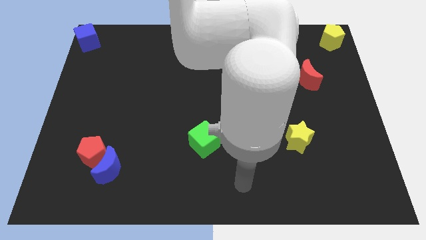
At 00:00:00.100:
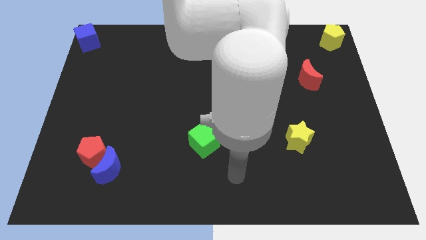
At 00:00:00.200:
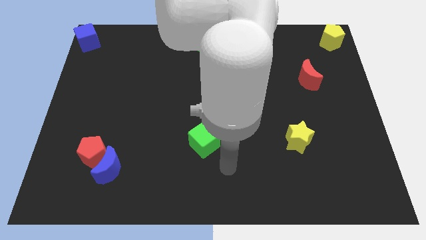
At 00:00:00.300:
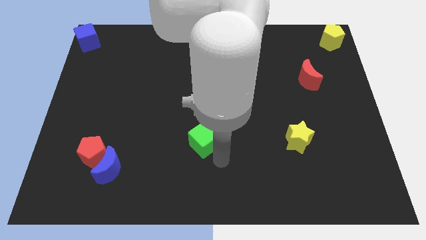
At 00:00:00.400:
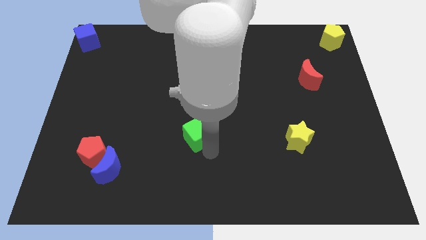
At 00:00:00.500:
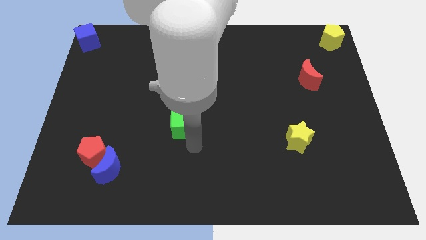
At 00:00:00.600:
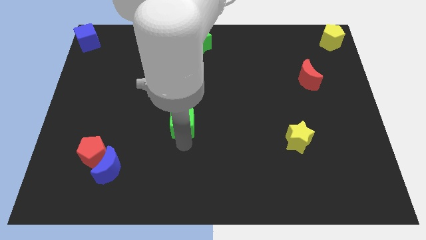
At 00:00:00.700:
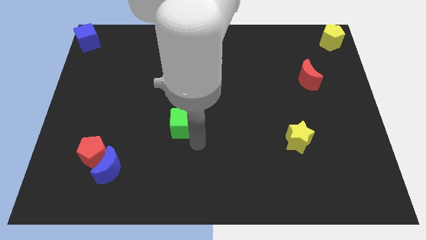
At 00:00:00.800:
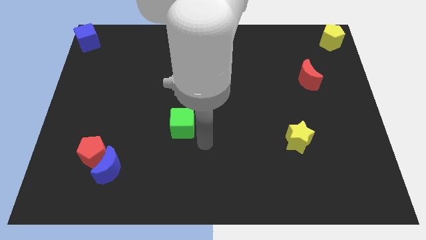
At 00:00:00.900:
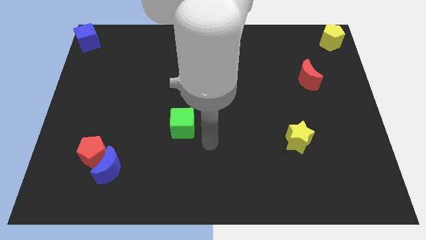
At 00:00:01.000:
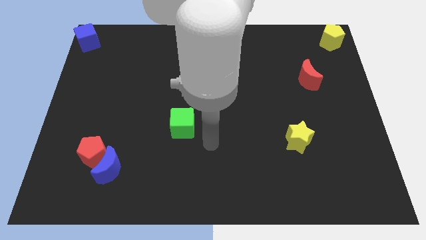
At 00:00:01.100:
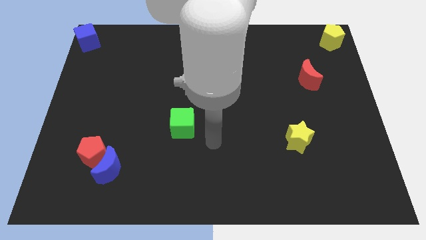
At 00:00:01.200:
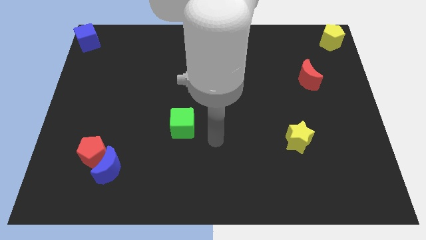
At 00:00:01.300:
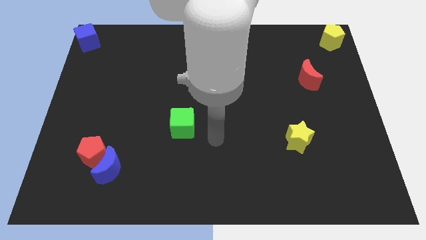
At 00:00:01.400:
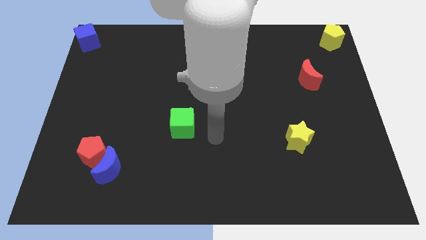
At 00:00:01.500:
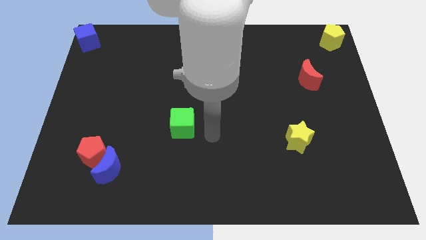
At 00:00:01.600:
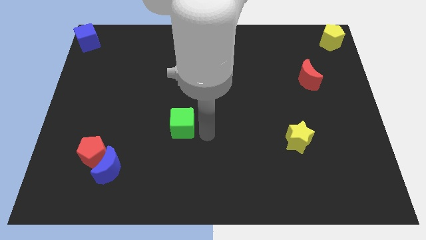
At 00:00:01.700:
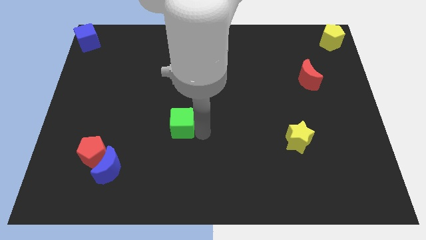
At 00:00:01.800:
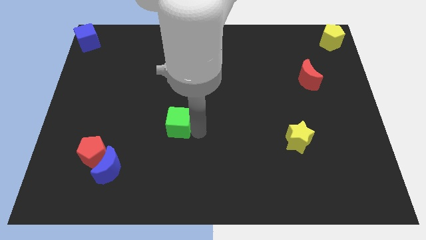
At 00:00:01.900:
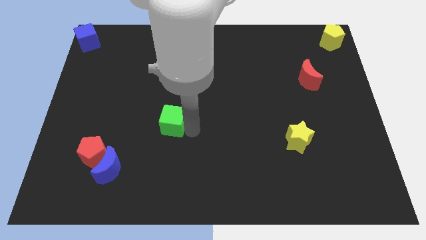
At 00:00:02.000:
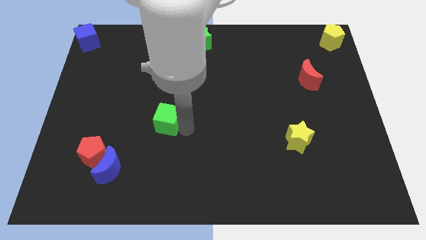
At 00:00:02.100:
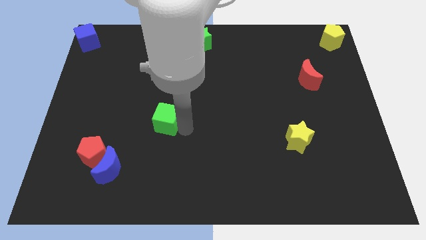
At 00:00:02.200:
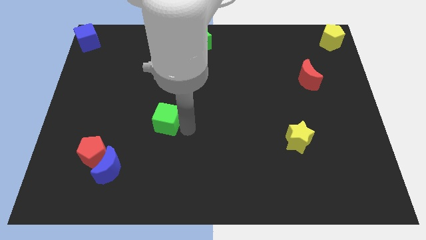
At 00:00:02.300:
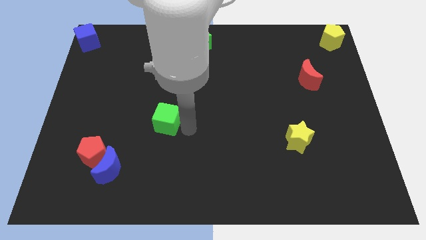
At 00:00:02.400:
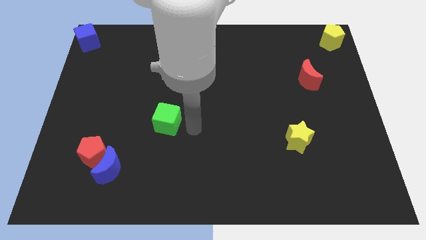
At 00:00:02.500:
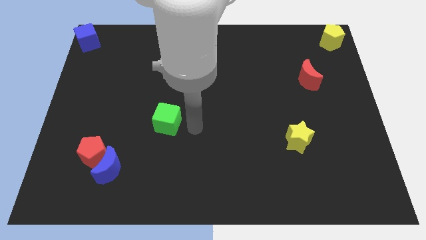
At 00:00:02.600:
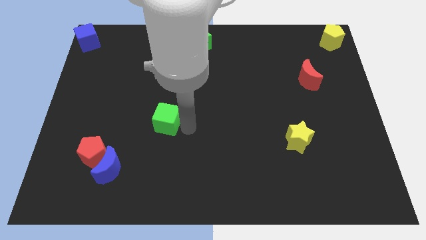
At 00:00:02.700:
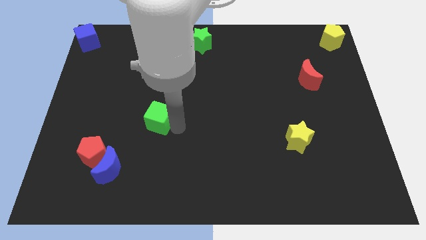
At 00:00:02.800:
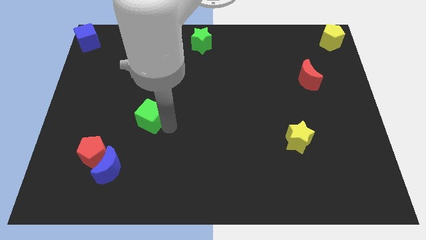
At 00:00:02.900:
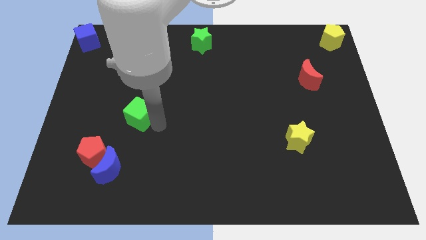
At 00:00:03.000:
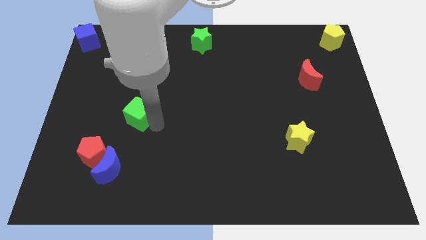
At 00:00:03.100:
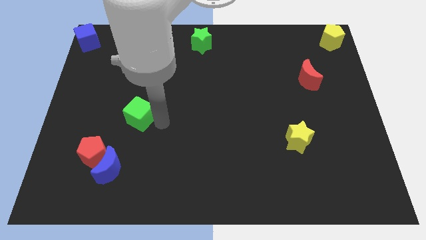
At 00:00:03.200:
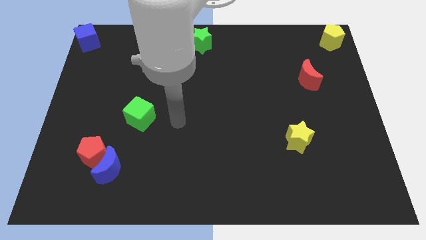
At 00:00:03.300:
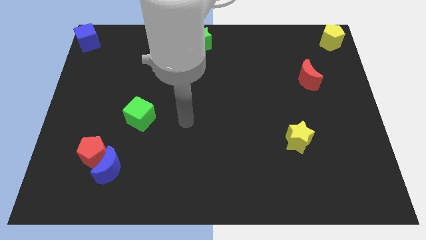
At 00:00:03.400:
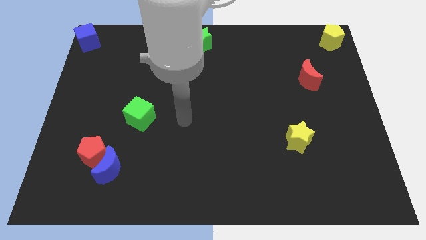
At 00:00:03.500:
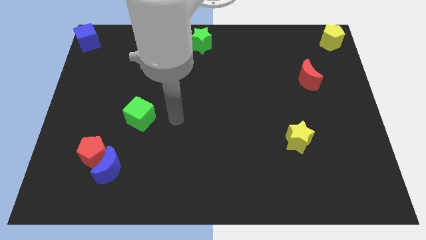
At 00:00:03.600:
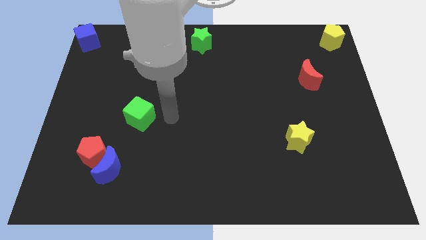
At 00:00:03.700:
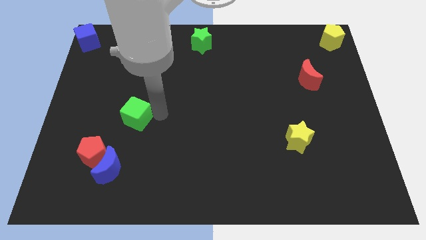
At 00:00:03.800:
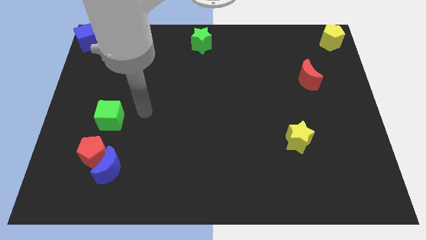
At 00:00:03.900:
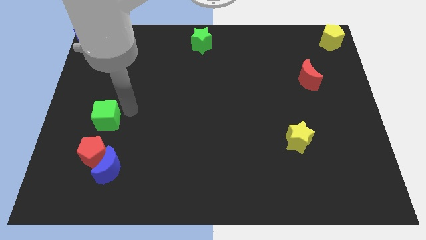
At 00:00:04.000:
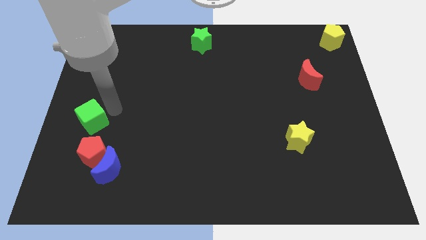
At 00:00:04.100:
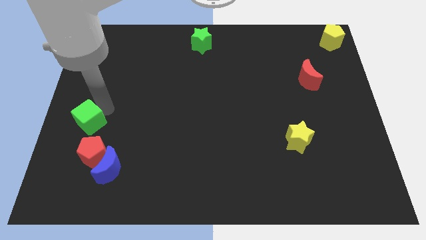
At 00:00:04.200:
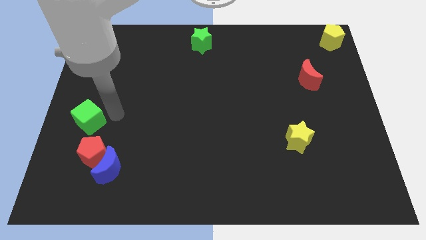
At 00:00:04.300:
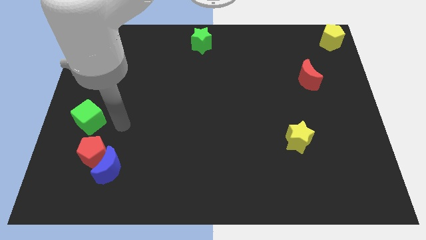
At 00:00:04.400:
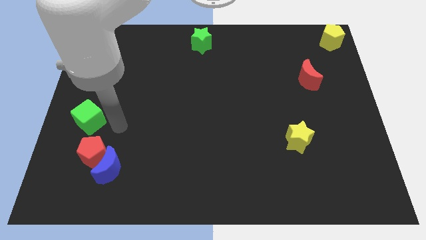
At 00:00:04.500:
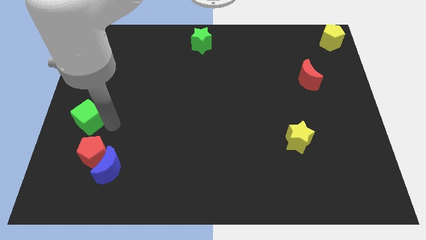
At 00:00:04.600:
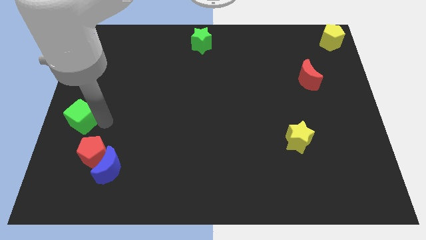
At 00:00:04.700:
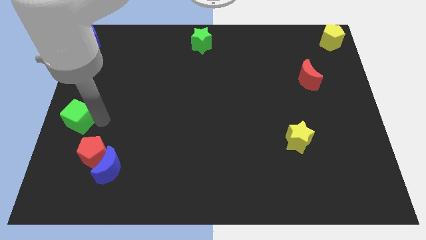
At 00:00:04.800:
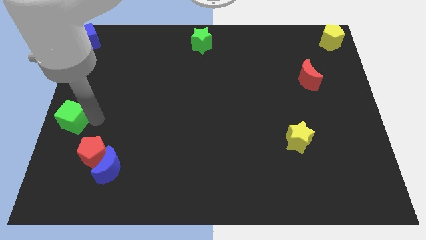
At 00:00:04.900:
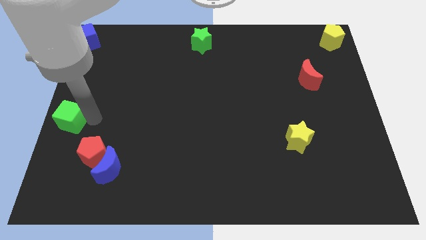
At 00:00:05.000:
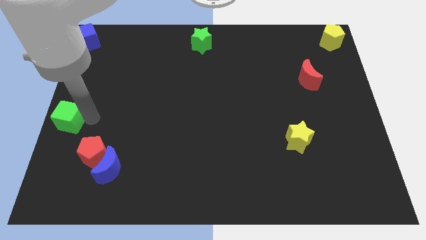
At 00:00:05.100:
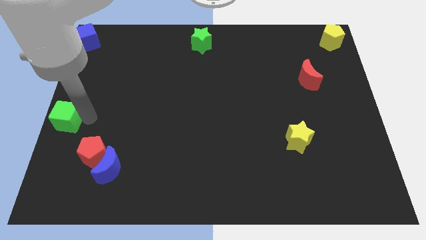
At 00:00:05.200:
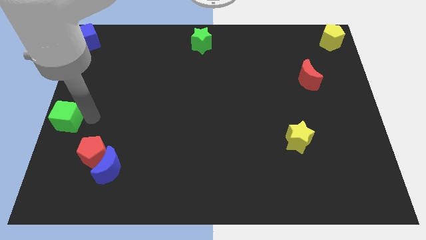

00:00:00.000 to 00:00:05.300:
move the green cube to center left

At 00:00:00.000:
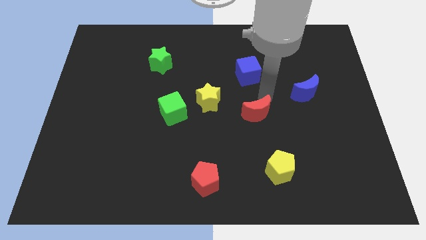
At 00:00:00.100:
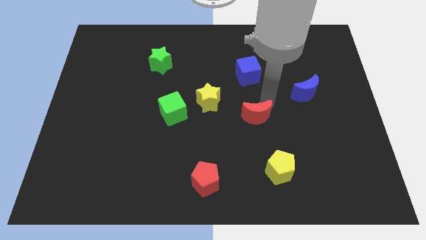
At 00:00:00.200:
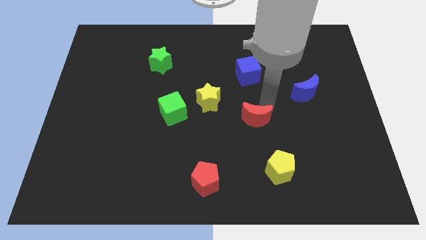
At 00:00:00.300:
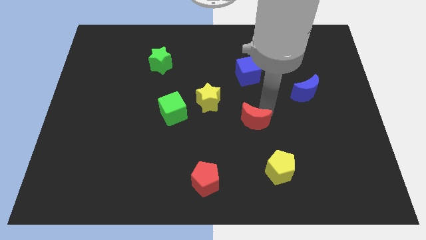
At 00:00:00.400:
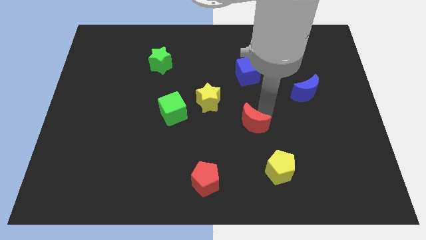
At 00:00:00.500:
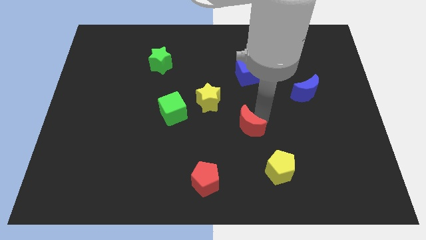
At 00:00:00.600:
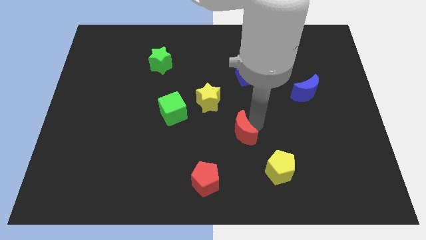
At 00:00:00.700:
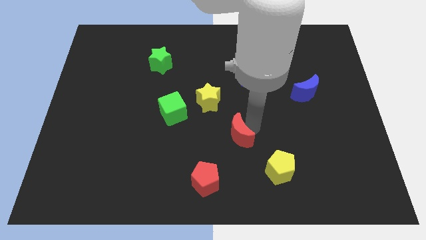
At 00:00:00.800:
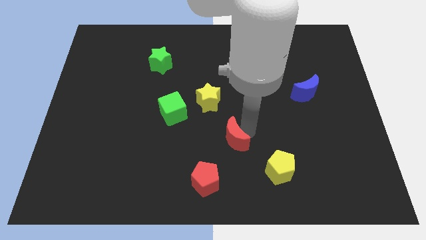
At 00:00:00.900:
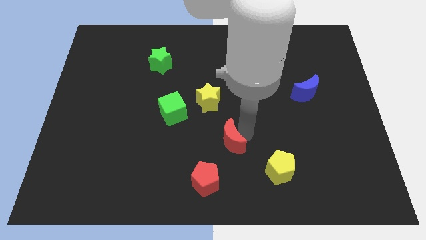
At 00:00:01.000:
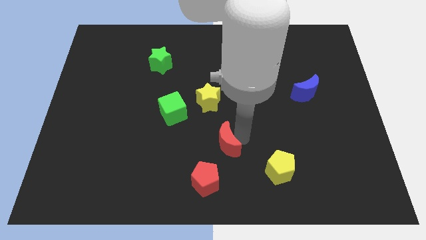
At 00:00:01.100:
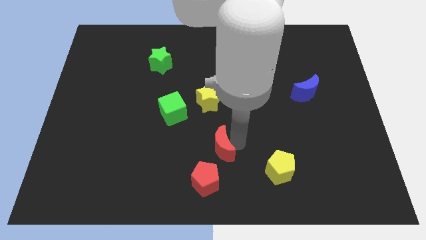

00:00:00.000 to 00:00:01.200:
push red crescent towards the red pentagon

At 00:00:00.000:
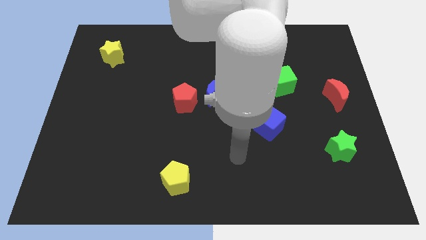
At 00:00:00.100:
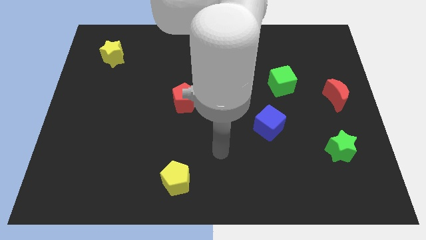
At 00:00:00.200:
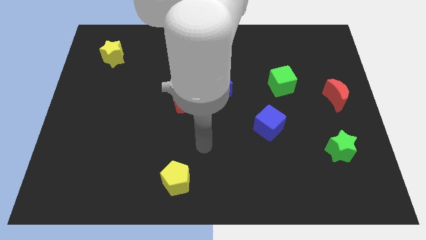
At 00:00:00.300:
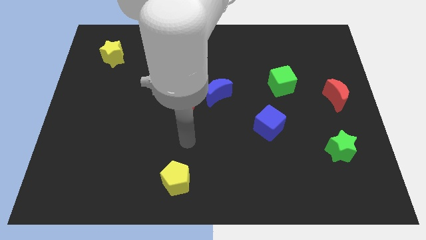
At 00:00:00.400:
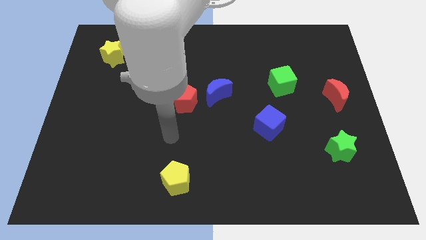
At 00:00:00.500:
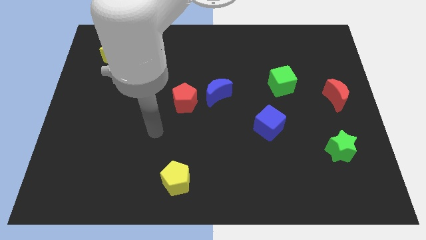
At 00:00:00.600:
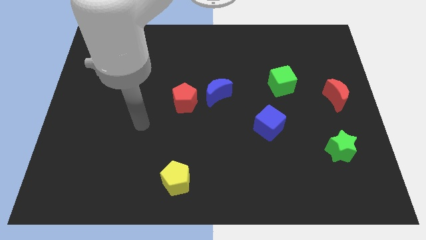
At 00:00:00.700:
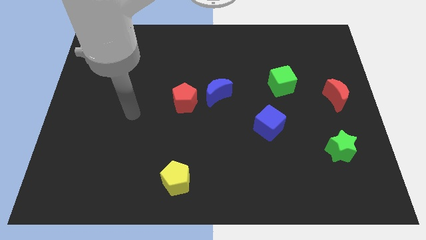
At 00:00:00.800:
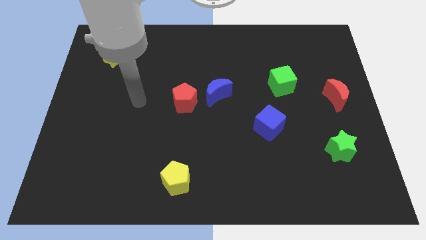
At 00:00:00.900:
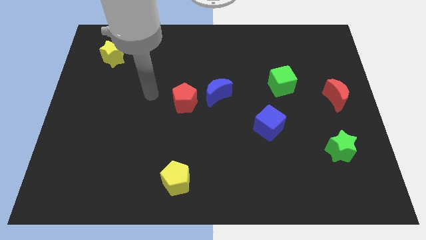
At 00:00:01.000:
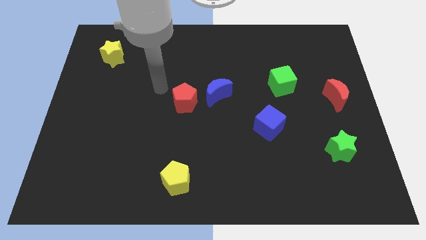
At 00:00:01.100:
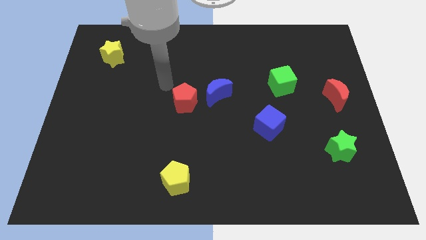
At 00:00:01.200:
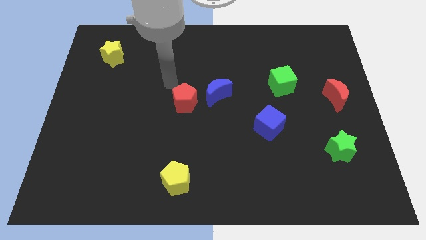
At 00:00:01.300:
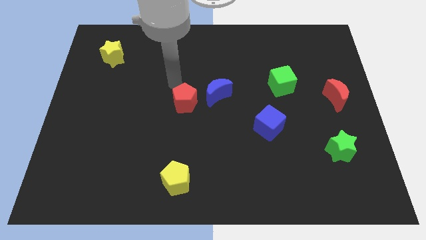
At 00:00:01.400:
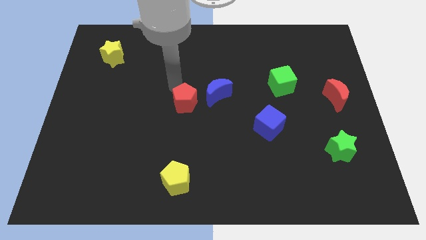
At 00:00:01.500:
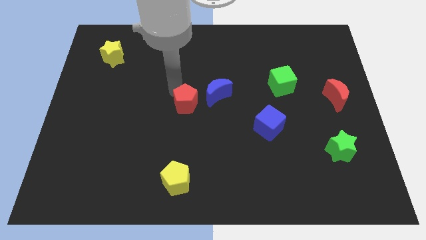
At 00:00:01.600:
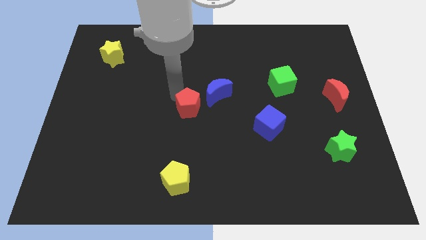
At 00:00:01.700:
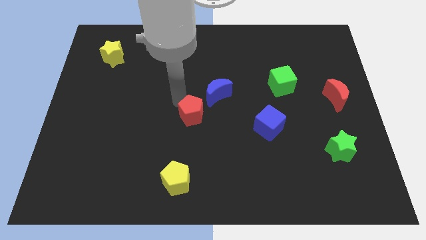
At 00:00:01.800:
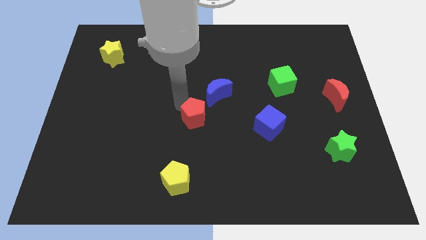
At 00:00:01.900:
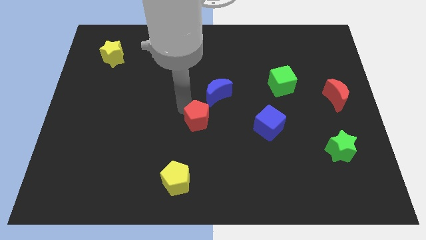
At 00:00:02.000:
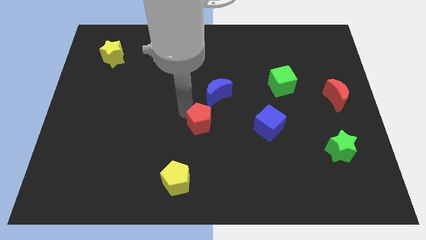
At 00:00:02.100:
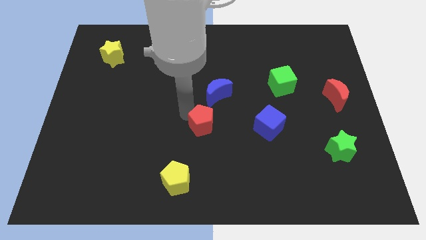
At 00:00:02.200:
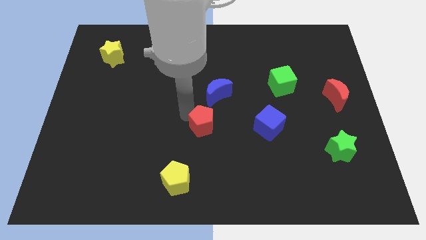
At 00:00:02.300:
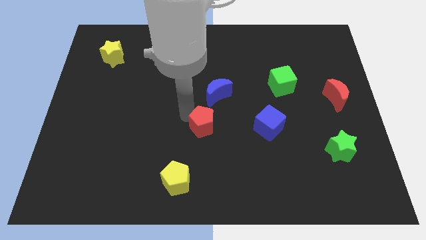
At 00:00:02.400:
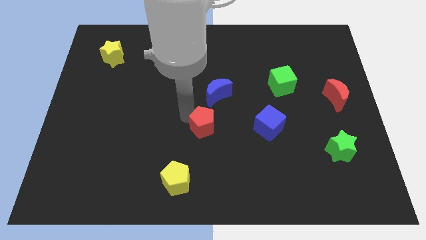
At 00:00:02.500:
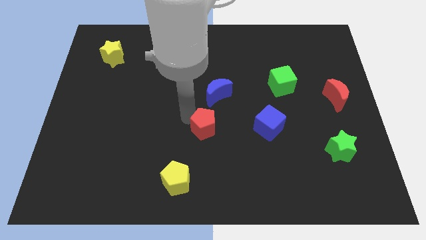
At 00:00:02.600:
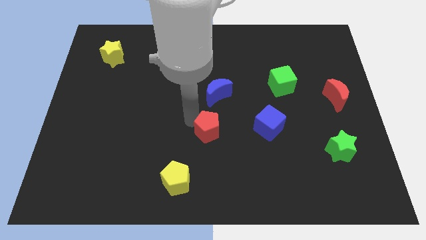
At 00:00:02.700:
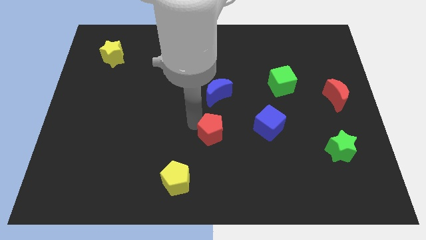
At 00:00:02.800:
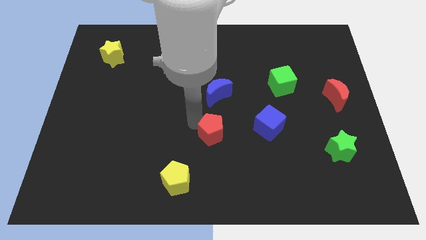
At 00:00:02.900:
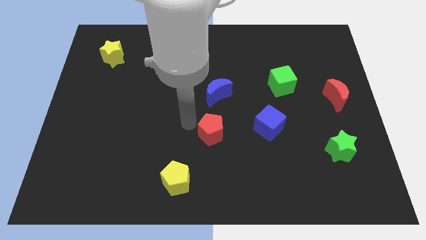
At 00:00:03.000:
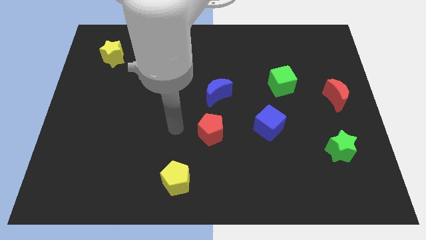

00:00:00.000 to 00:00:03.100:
place red pentagon below blue moon
